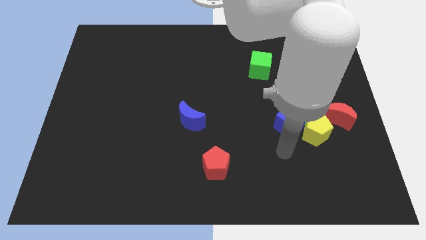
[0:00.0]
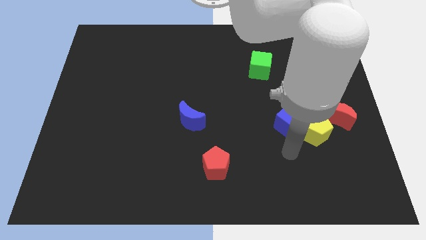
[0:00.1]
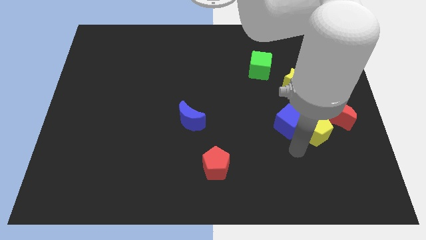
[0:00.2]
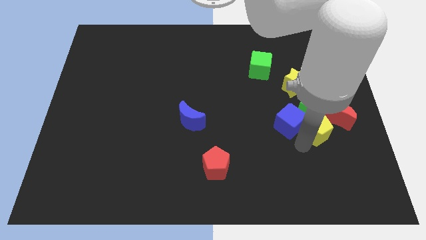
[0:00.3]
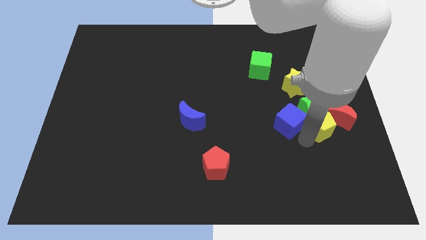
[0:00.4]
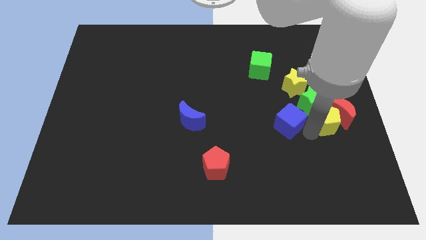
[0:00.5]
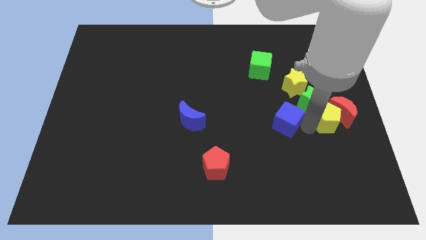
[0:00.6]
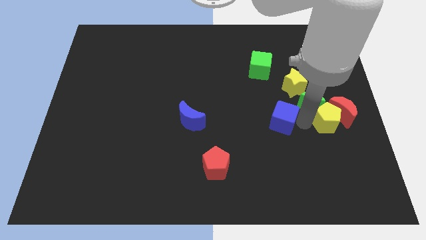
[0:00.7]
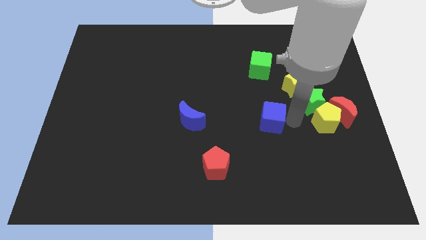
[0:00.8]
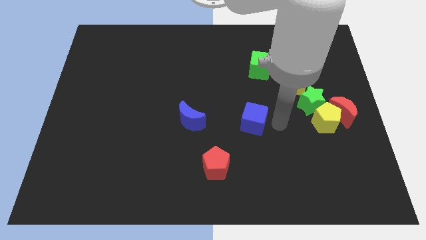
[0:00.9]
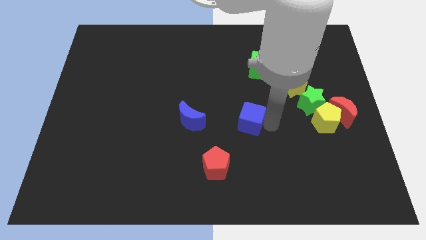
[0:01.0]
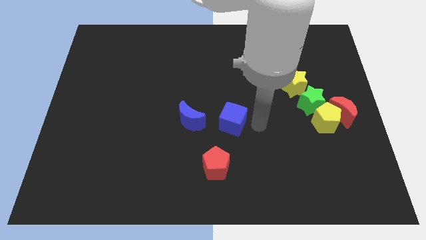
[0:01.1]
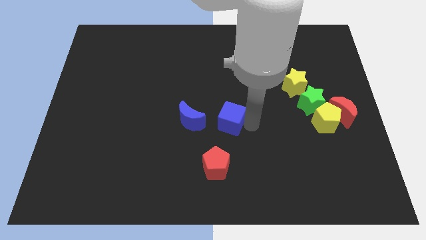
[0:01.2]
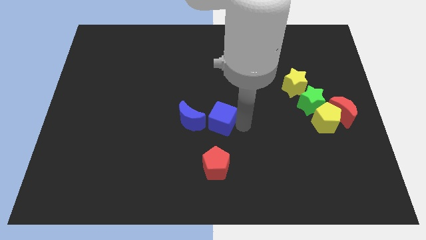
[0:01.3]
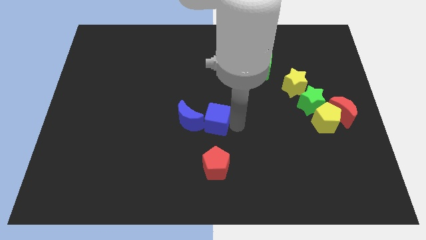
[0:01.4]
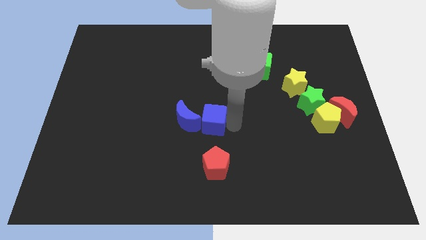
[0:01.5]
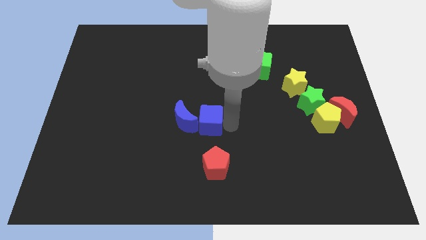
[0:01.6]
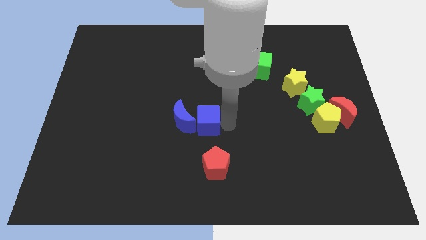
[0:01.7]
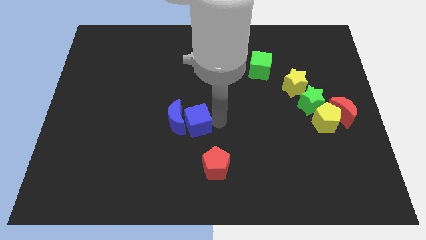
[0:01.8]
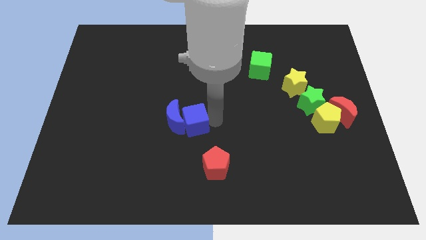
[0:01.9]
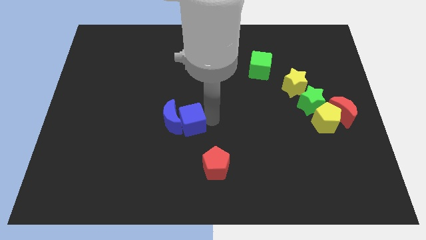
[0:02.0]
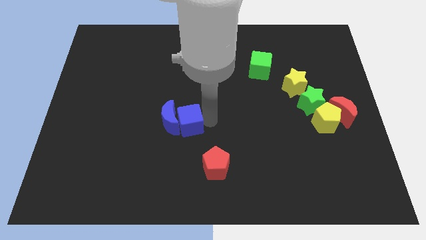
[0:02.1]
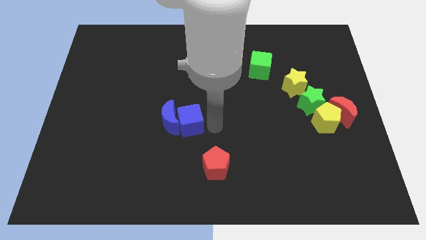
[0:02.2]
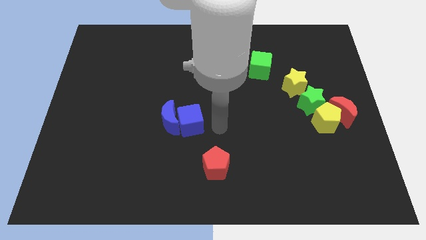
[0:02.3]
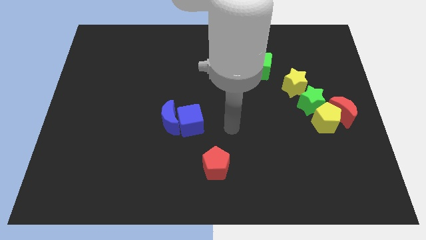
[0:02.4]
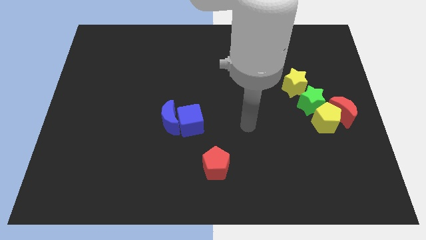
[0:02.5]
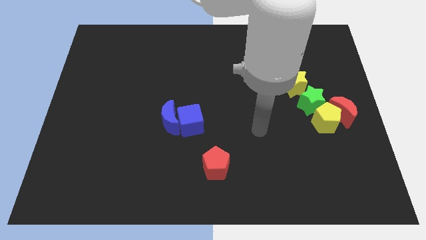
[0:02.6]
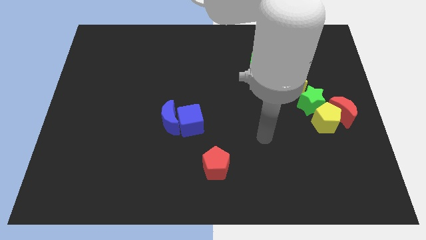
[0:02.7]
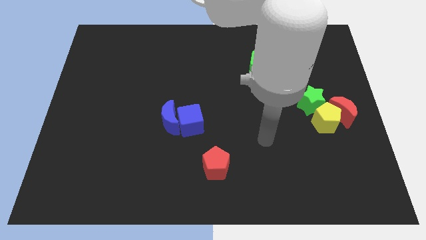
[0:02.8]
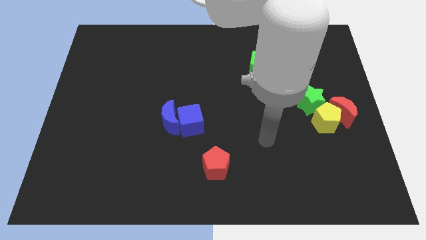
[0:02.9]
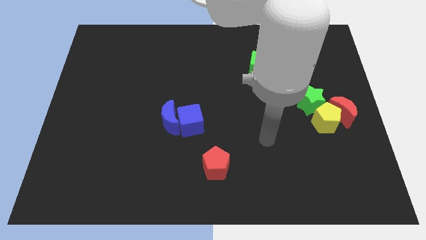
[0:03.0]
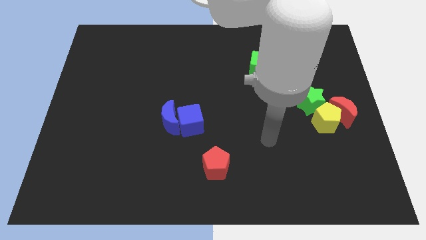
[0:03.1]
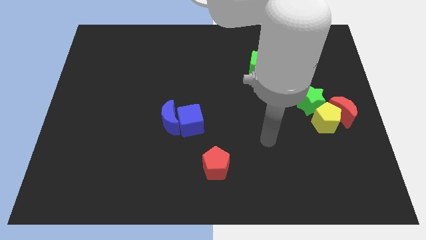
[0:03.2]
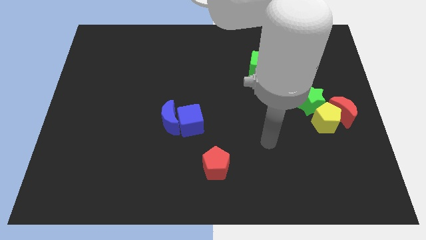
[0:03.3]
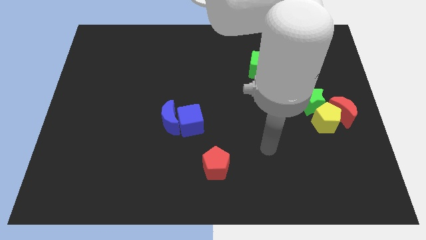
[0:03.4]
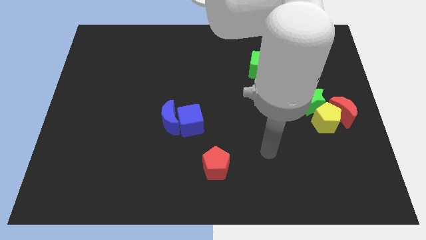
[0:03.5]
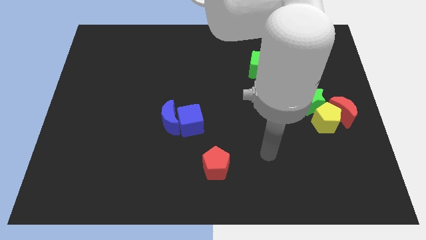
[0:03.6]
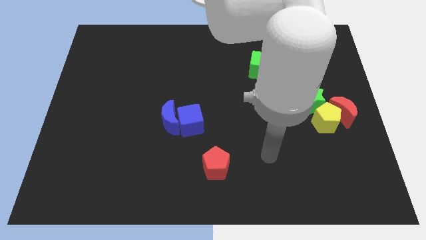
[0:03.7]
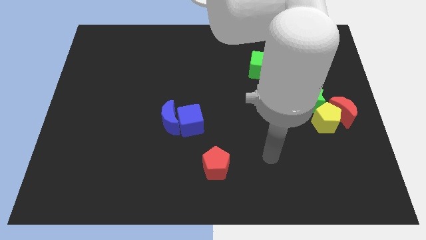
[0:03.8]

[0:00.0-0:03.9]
push blue cube towards blue moon

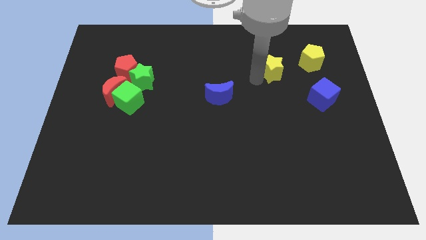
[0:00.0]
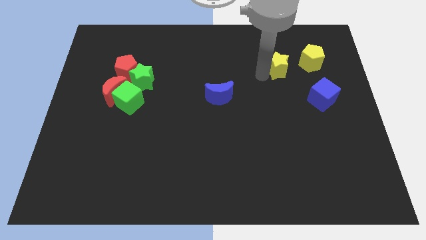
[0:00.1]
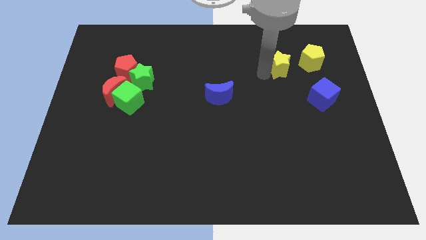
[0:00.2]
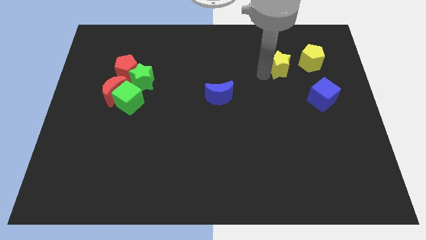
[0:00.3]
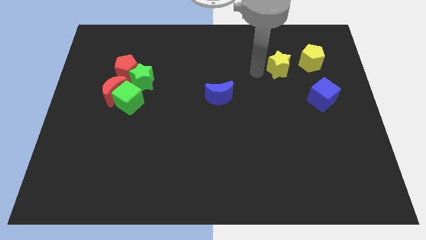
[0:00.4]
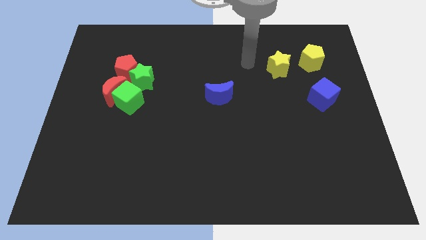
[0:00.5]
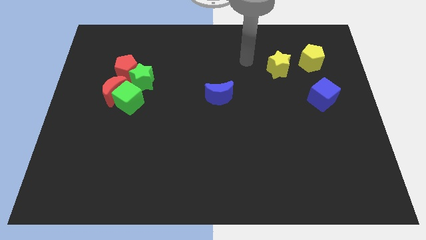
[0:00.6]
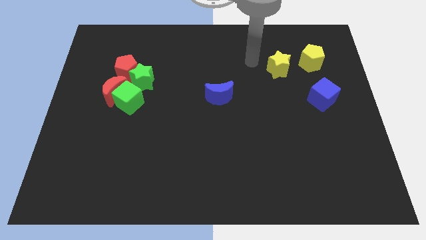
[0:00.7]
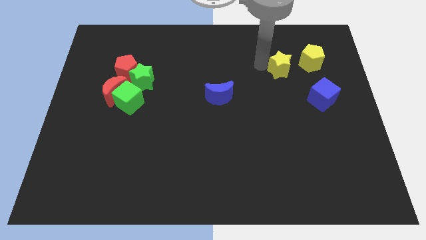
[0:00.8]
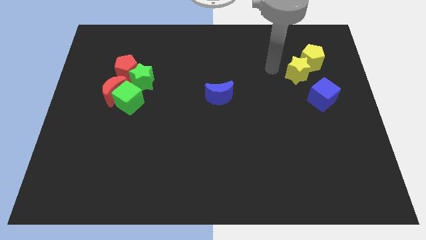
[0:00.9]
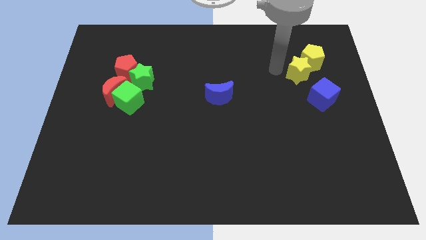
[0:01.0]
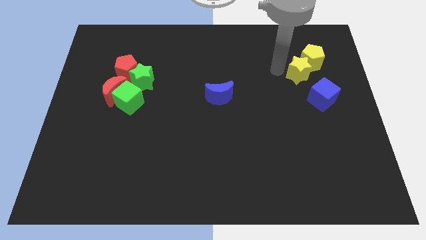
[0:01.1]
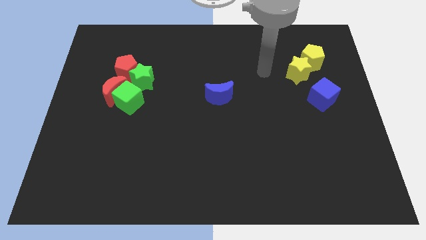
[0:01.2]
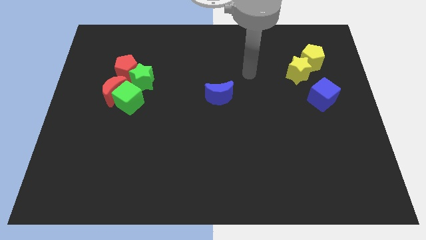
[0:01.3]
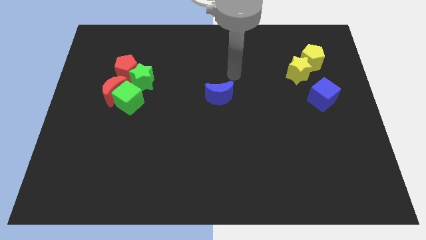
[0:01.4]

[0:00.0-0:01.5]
move the yellow star to the left bottom side of the yellow pentagon

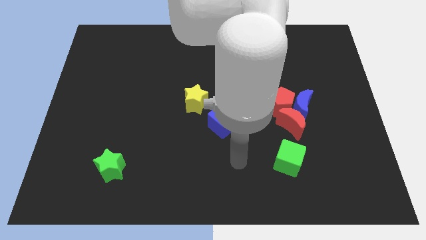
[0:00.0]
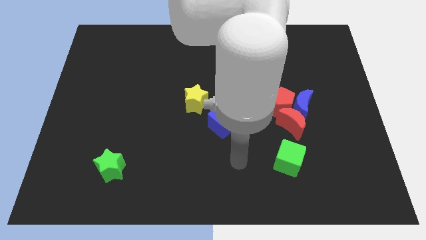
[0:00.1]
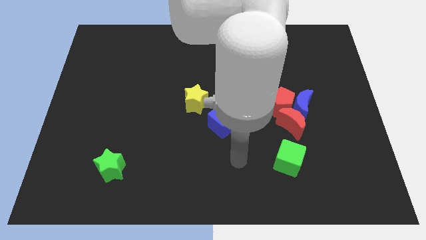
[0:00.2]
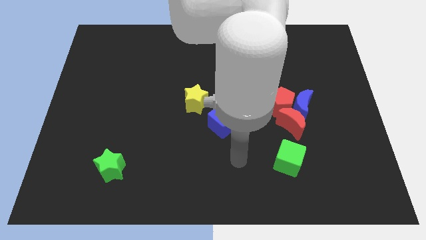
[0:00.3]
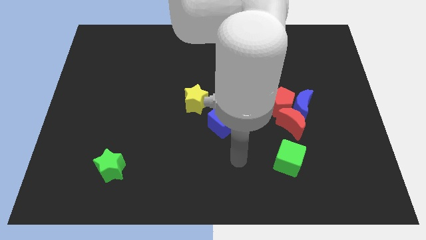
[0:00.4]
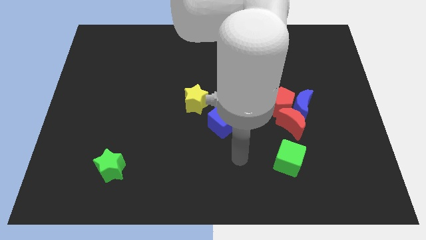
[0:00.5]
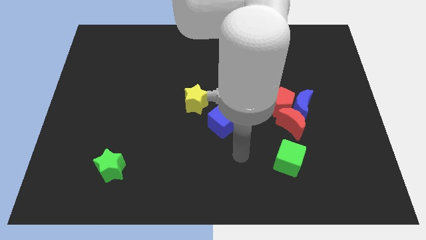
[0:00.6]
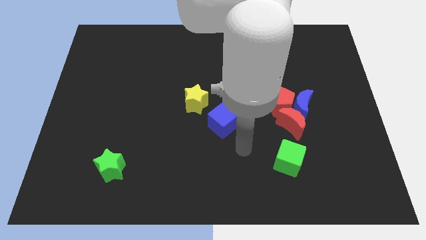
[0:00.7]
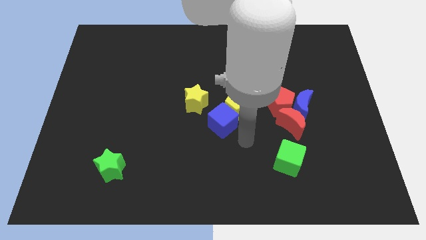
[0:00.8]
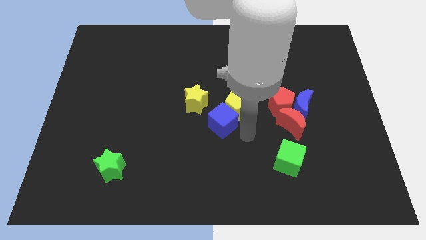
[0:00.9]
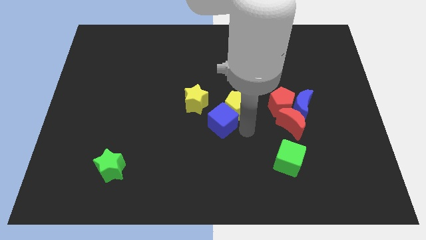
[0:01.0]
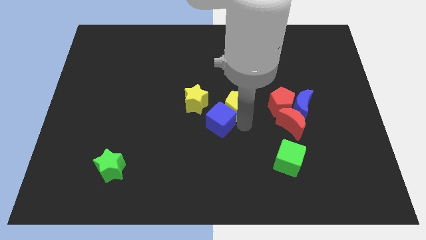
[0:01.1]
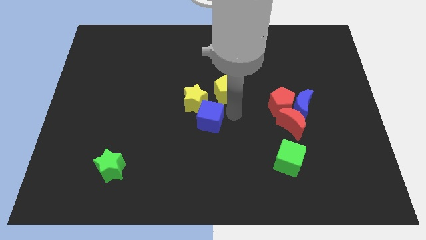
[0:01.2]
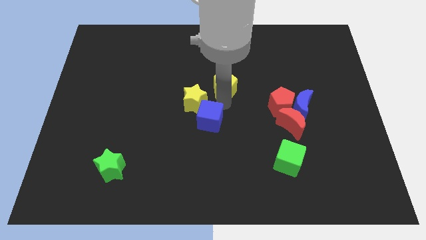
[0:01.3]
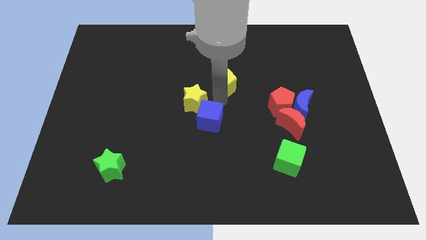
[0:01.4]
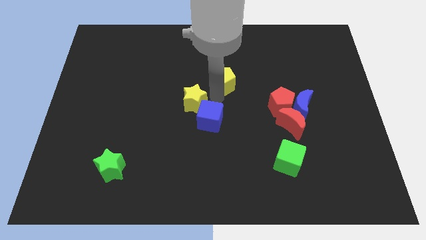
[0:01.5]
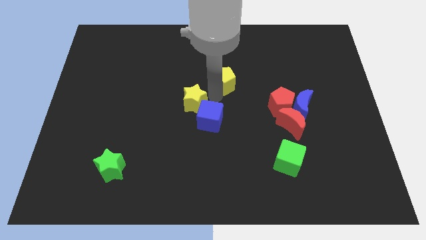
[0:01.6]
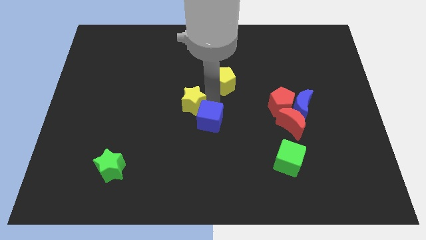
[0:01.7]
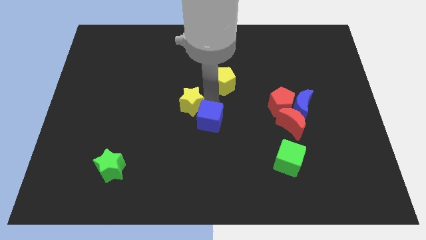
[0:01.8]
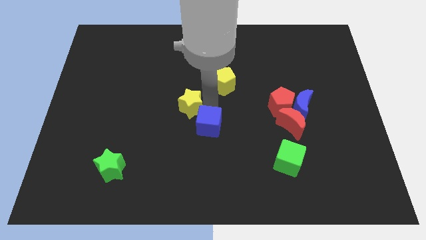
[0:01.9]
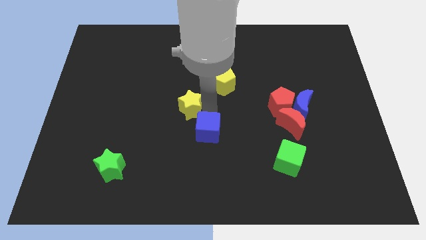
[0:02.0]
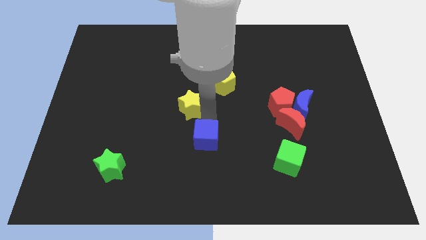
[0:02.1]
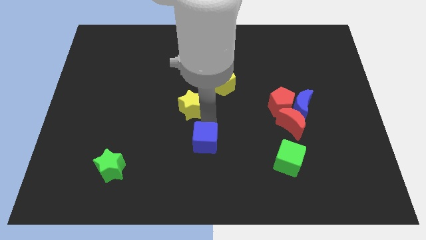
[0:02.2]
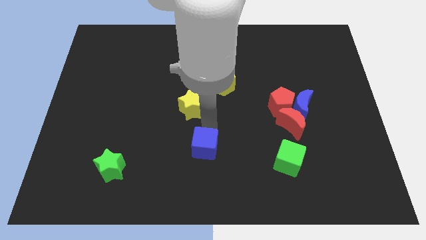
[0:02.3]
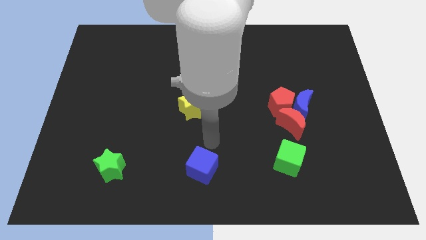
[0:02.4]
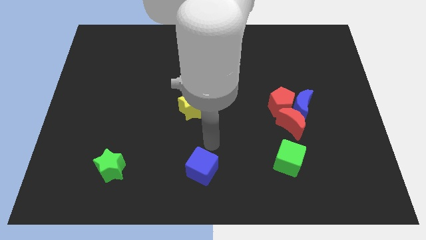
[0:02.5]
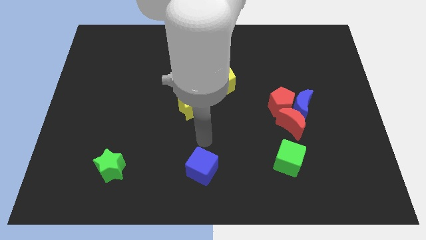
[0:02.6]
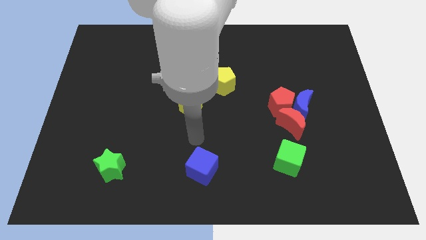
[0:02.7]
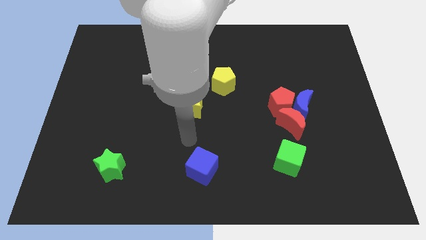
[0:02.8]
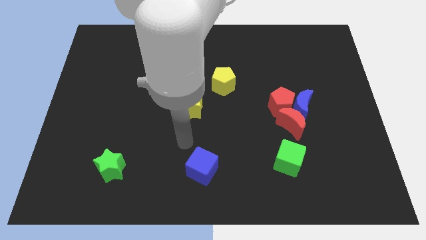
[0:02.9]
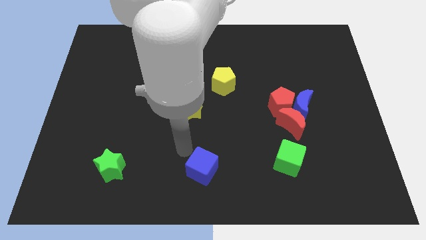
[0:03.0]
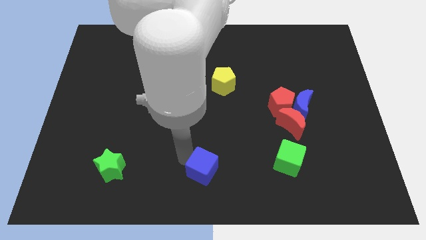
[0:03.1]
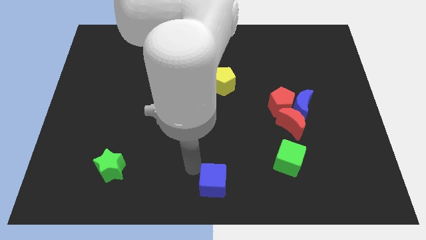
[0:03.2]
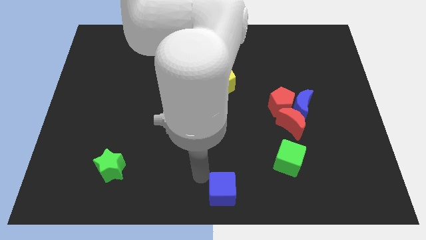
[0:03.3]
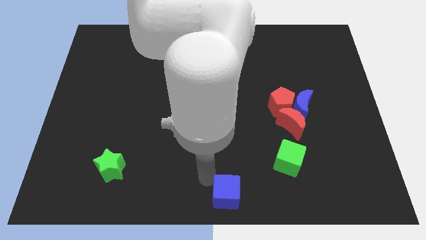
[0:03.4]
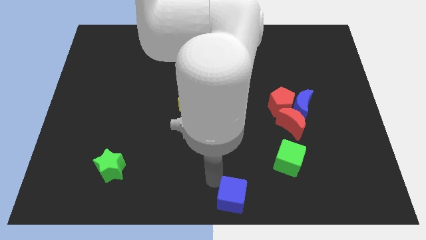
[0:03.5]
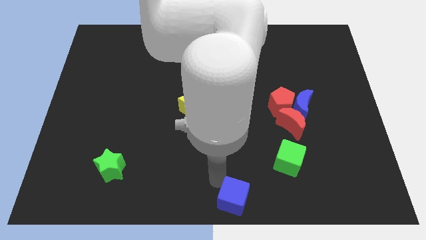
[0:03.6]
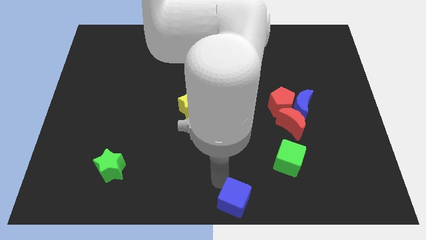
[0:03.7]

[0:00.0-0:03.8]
push the blue cube to the bottom center of the board
